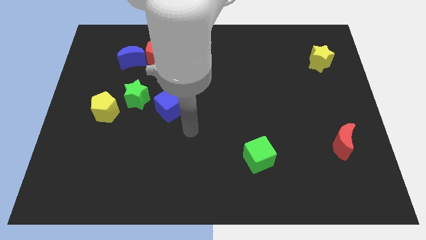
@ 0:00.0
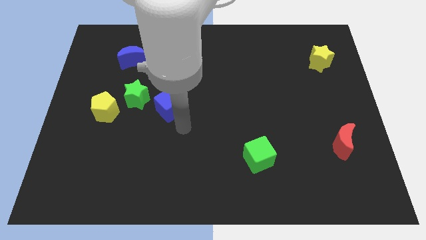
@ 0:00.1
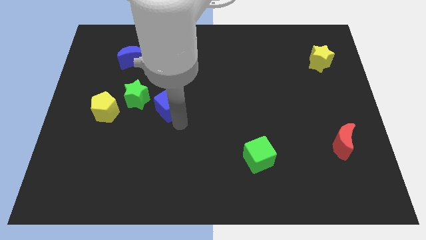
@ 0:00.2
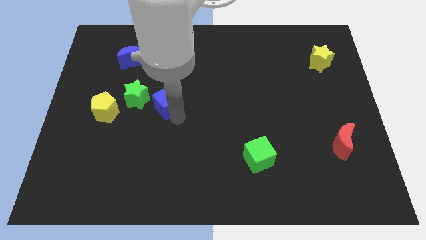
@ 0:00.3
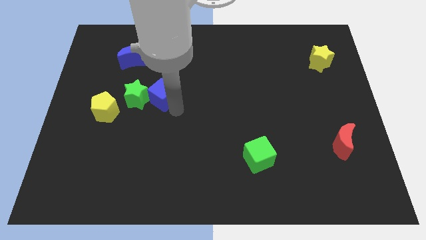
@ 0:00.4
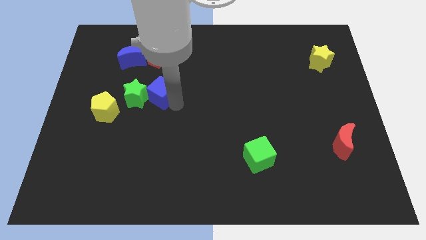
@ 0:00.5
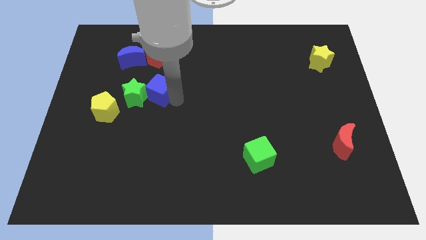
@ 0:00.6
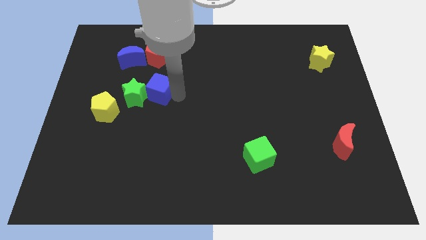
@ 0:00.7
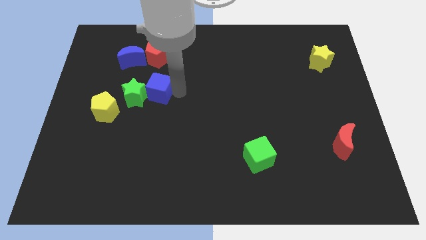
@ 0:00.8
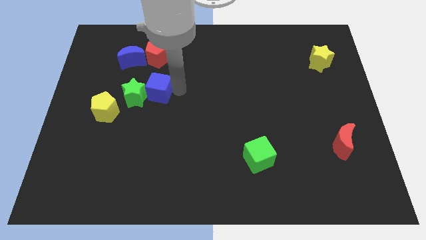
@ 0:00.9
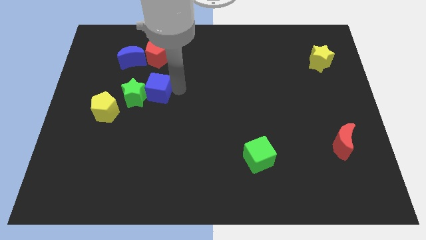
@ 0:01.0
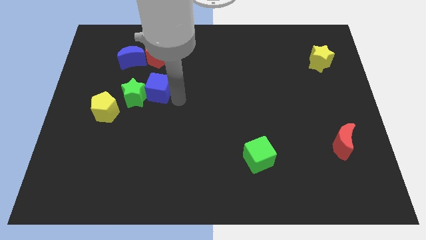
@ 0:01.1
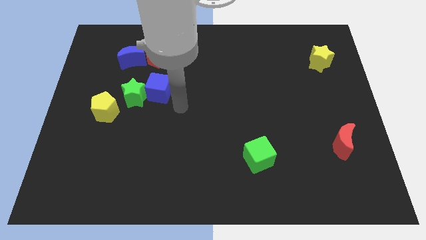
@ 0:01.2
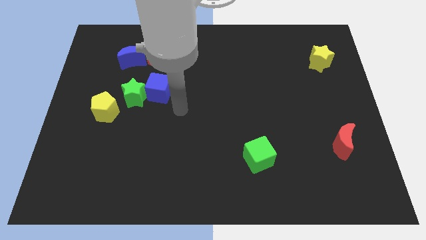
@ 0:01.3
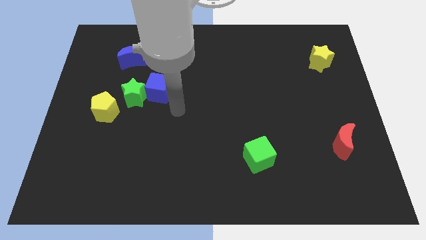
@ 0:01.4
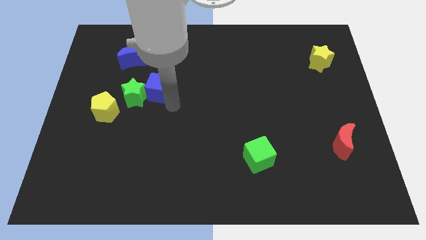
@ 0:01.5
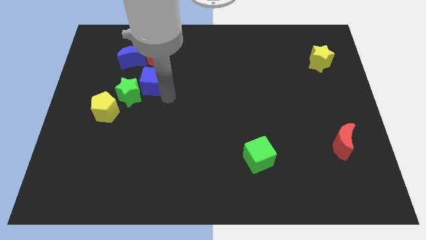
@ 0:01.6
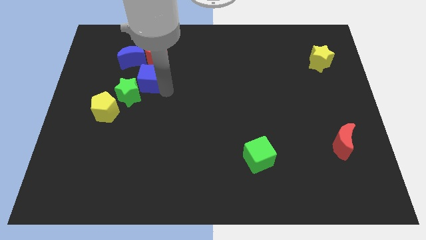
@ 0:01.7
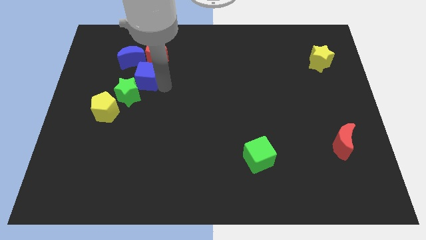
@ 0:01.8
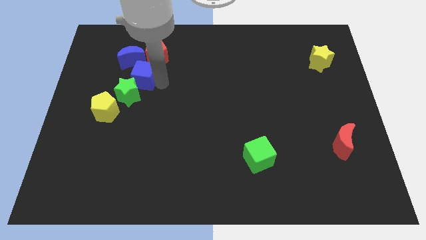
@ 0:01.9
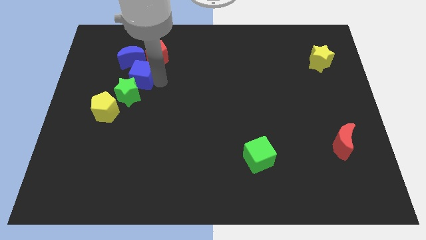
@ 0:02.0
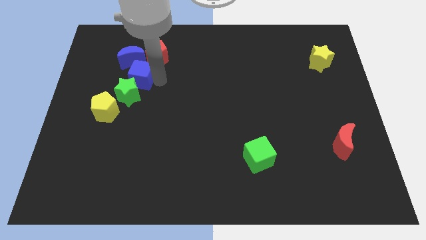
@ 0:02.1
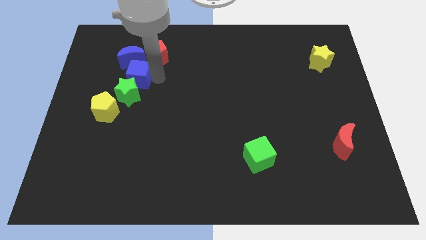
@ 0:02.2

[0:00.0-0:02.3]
slide the blue cube in between the green star and the blue moon

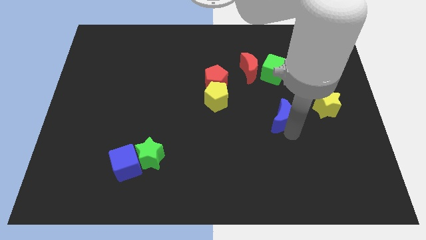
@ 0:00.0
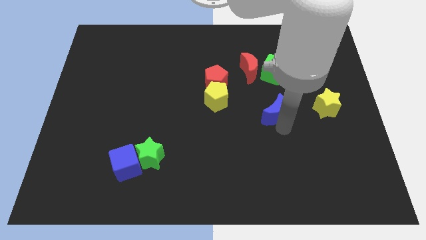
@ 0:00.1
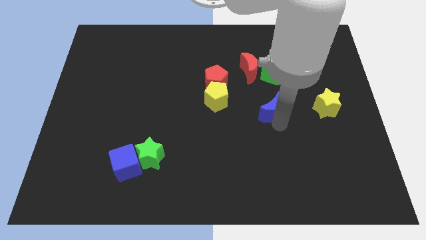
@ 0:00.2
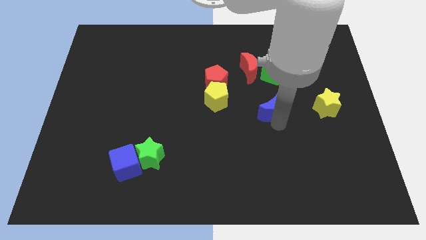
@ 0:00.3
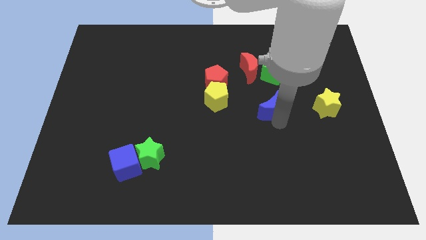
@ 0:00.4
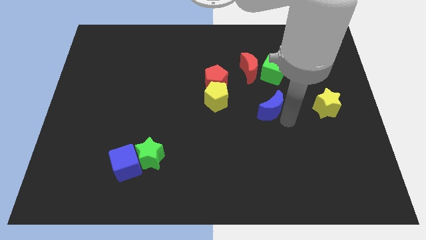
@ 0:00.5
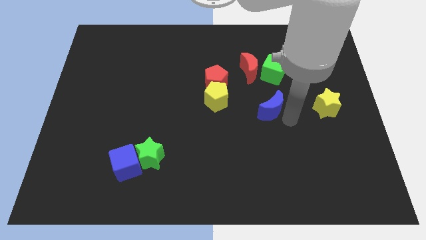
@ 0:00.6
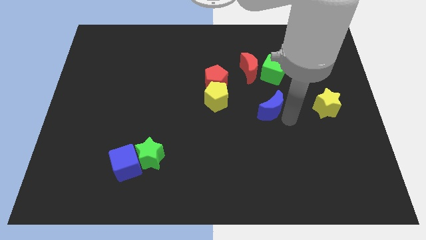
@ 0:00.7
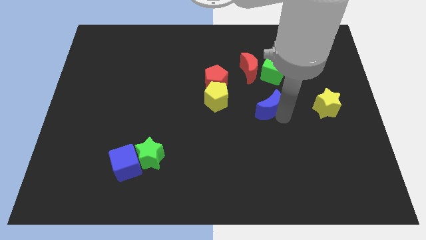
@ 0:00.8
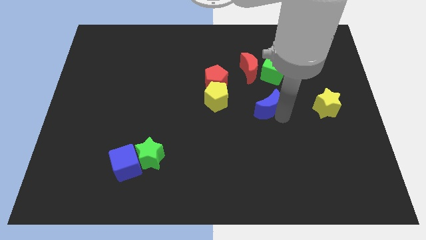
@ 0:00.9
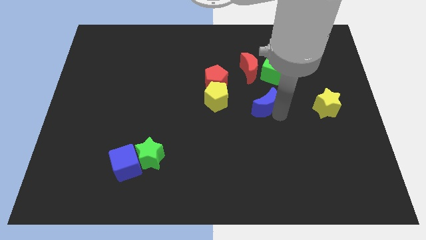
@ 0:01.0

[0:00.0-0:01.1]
place the blue moon in between the yellow star and yellow pentagon

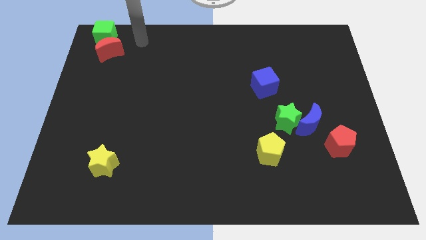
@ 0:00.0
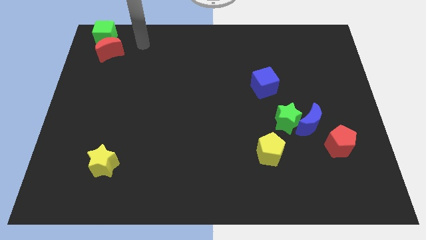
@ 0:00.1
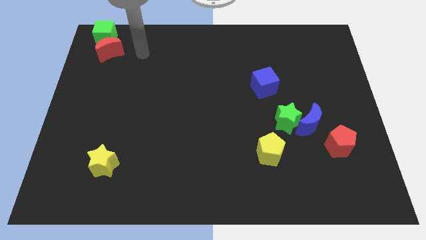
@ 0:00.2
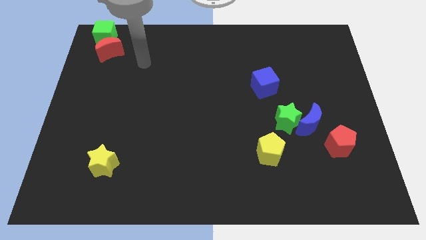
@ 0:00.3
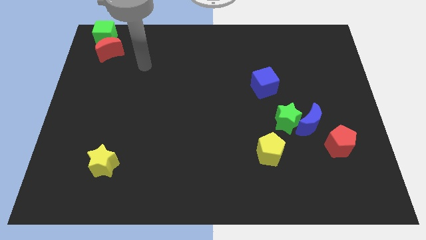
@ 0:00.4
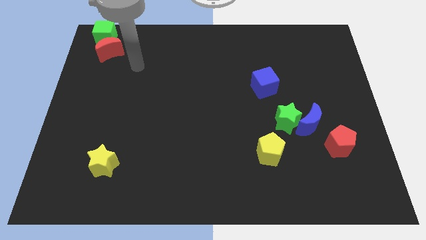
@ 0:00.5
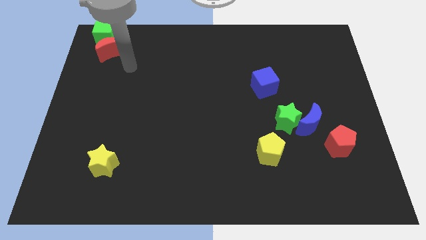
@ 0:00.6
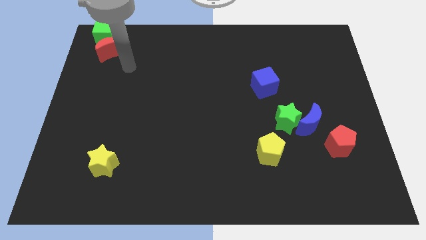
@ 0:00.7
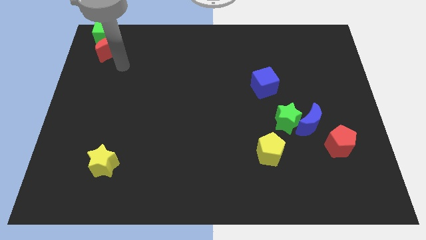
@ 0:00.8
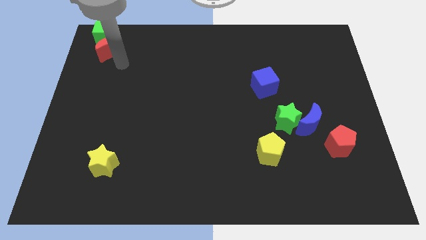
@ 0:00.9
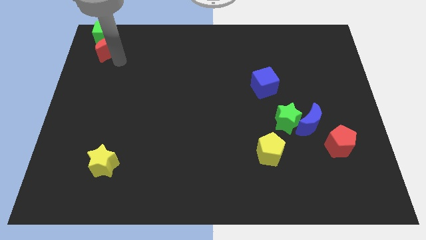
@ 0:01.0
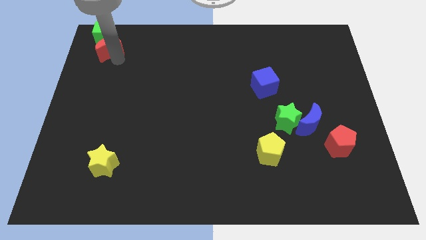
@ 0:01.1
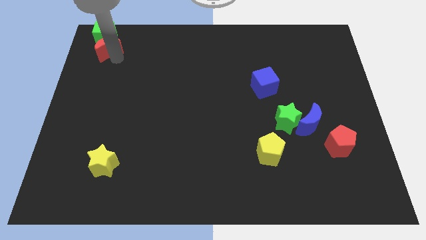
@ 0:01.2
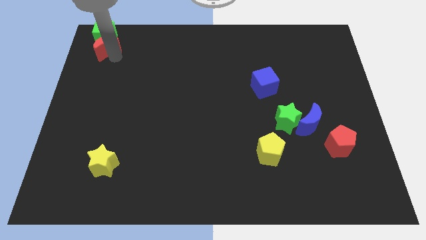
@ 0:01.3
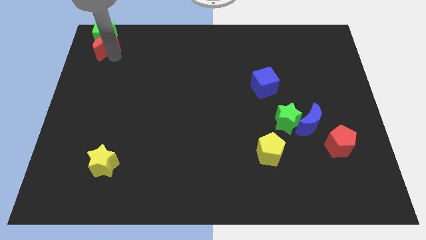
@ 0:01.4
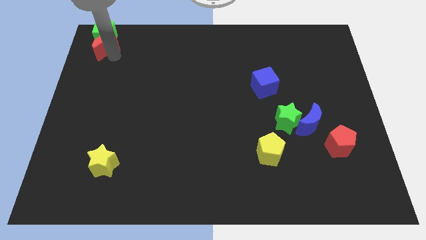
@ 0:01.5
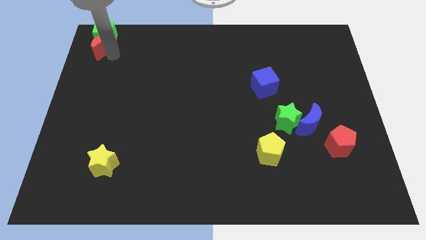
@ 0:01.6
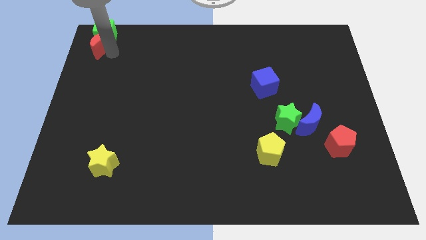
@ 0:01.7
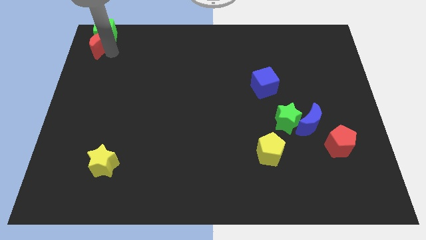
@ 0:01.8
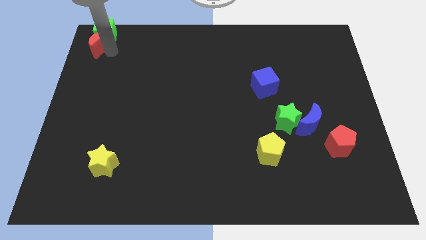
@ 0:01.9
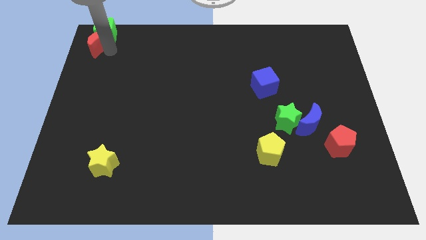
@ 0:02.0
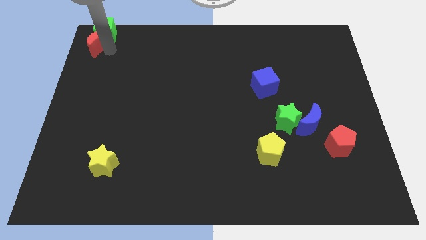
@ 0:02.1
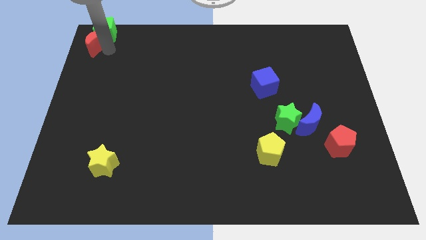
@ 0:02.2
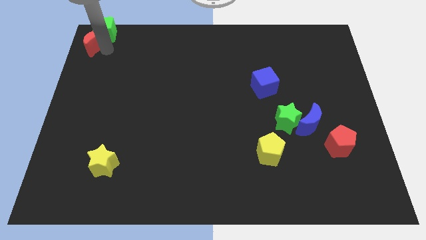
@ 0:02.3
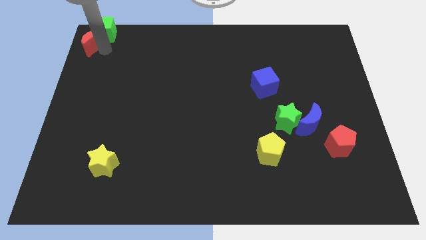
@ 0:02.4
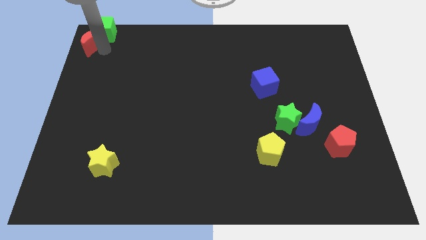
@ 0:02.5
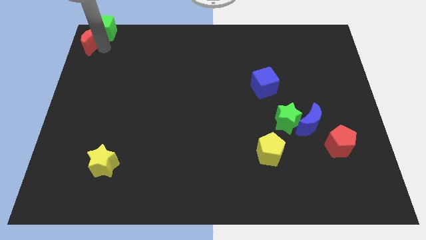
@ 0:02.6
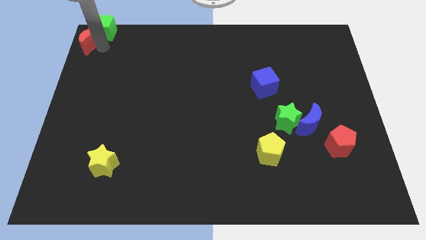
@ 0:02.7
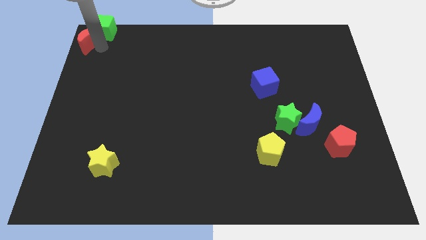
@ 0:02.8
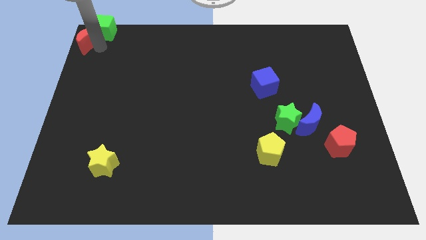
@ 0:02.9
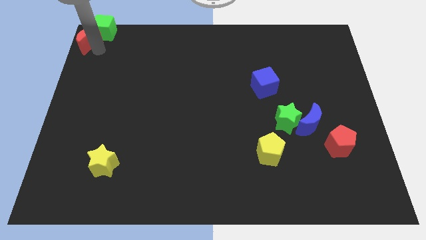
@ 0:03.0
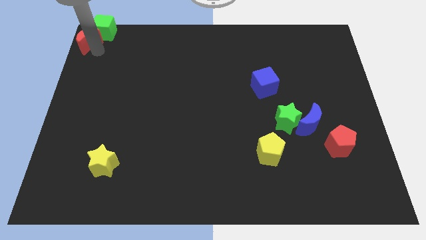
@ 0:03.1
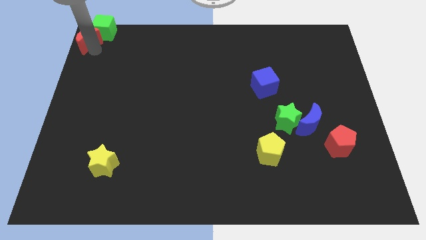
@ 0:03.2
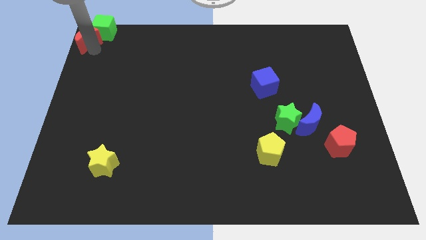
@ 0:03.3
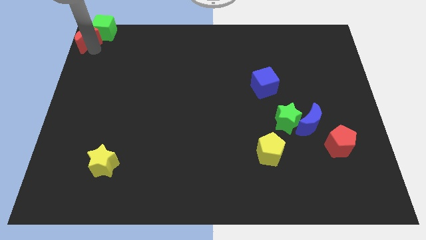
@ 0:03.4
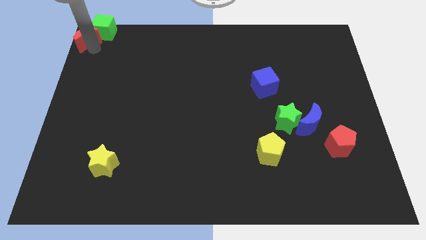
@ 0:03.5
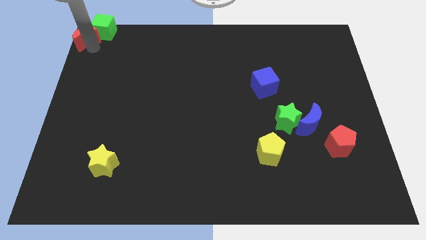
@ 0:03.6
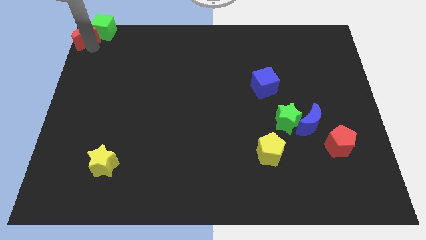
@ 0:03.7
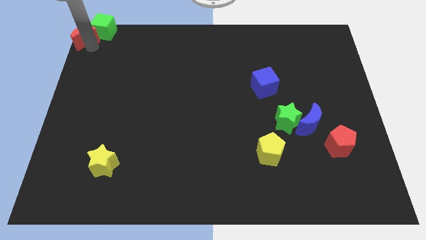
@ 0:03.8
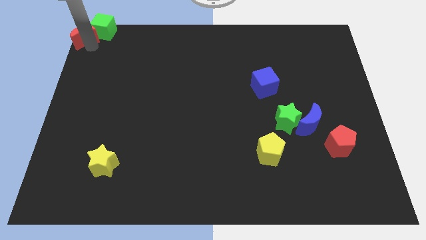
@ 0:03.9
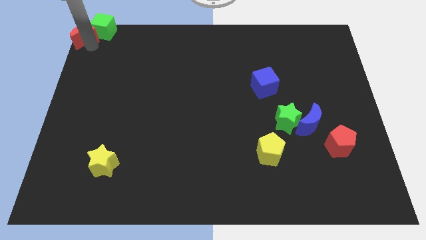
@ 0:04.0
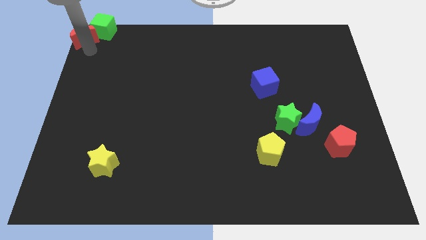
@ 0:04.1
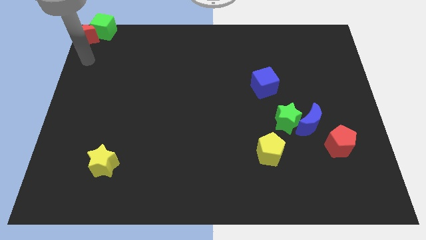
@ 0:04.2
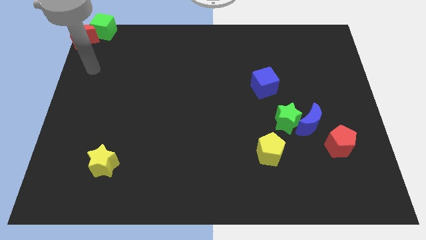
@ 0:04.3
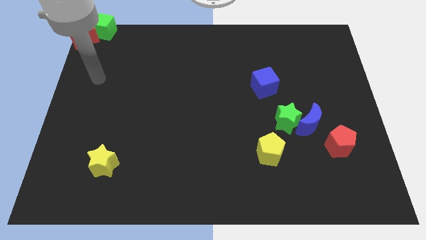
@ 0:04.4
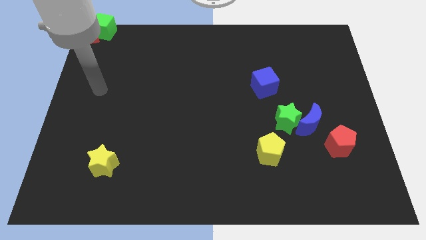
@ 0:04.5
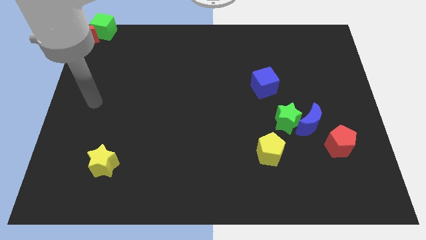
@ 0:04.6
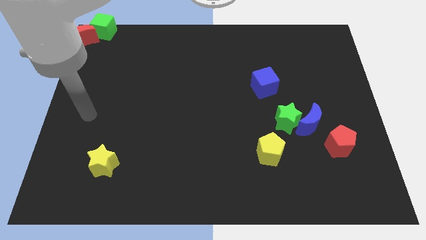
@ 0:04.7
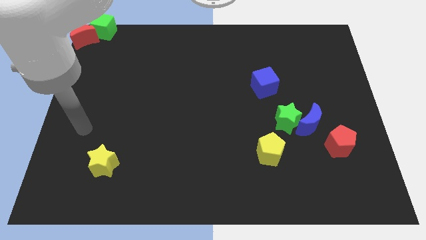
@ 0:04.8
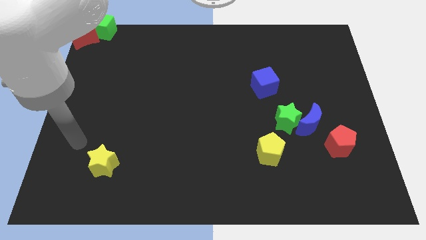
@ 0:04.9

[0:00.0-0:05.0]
adjust the red crescent and the green cube to the top left corner of the board

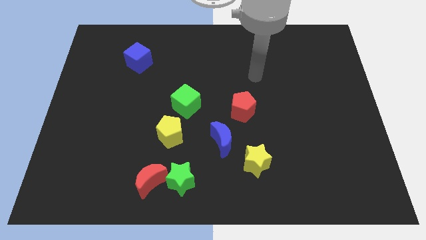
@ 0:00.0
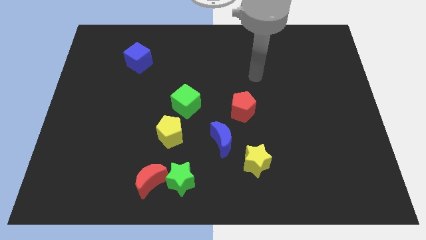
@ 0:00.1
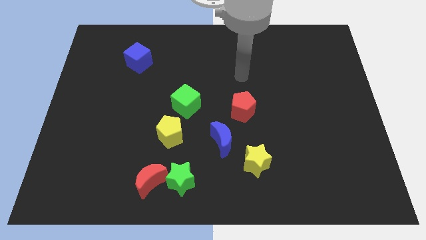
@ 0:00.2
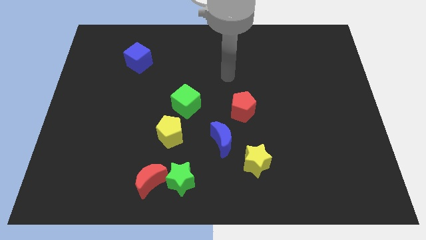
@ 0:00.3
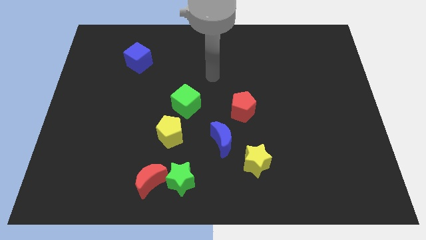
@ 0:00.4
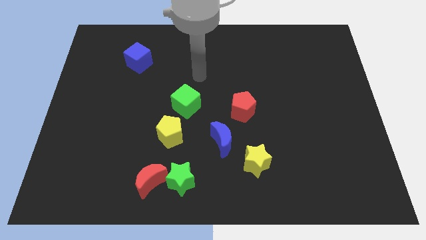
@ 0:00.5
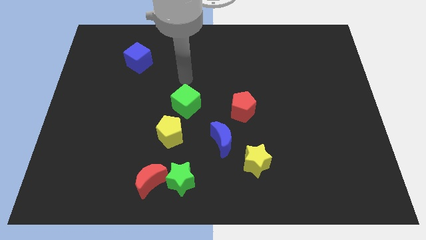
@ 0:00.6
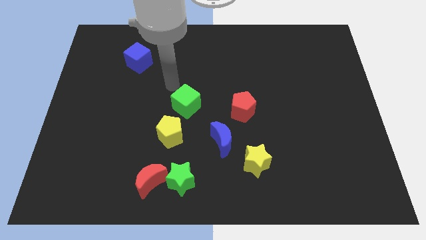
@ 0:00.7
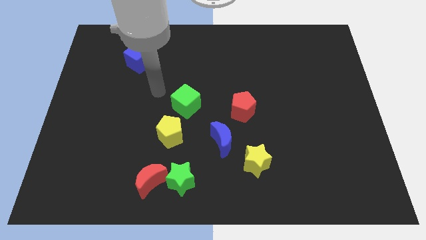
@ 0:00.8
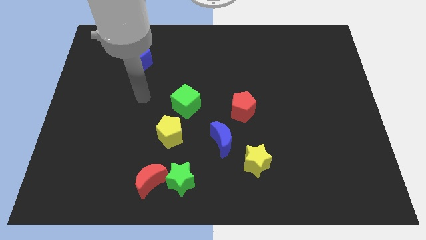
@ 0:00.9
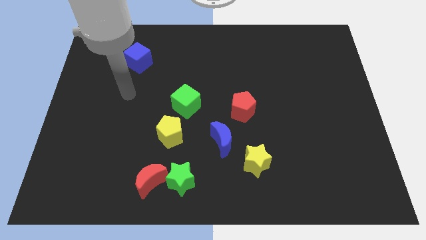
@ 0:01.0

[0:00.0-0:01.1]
move the arm below the blue cube
